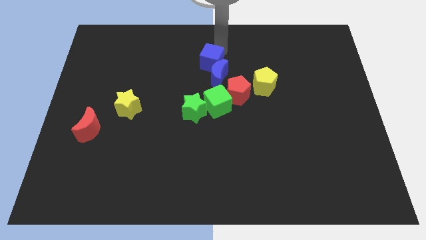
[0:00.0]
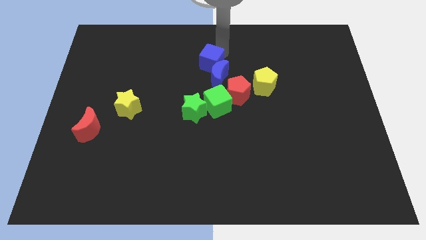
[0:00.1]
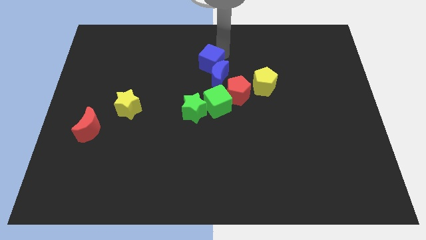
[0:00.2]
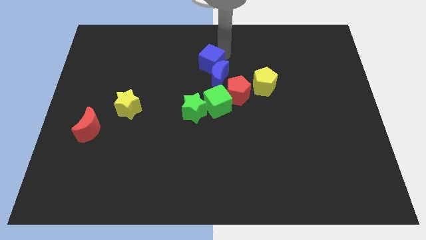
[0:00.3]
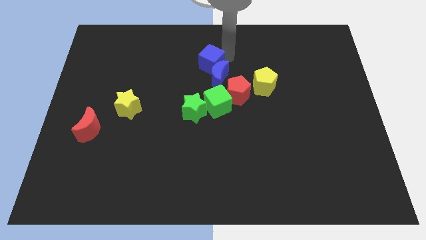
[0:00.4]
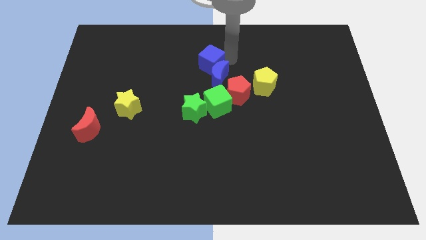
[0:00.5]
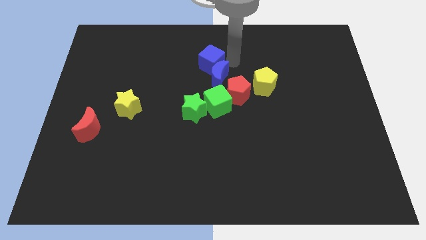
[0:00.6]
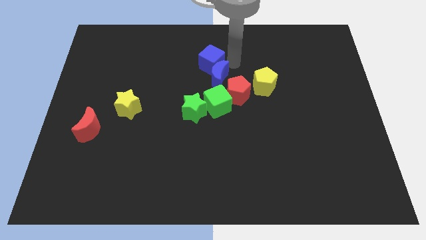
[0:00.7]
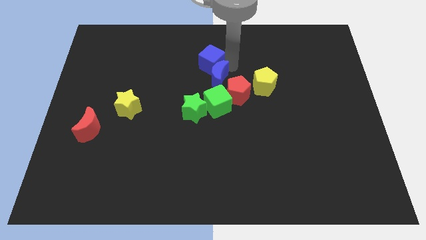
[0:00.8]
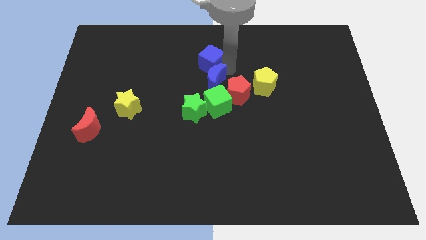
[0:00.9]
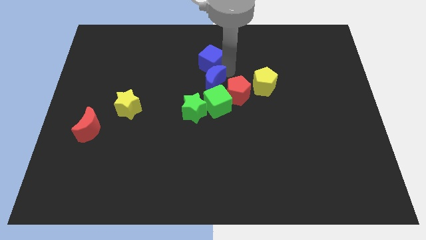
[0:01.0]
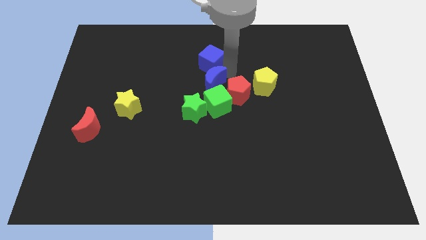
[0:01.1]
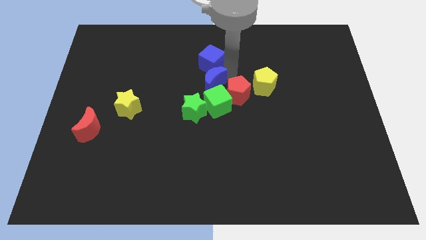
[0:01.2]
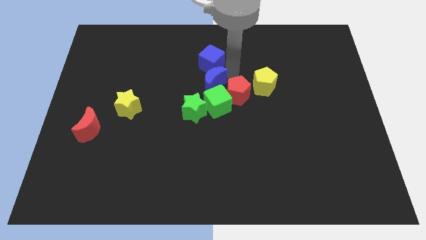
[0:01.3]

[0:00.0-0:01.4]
slightly move the blue crescent towards the green cube

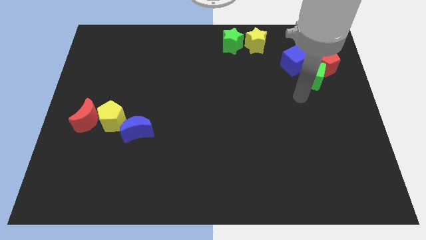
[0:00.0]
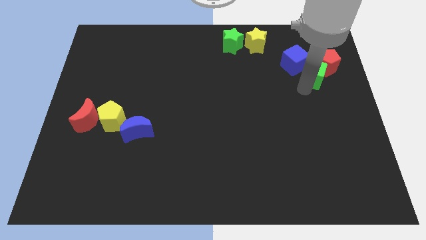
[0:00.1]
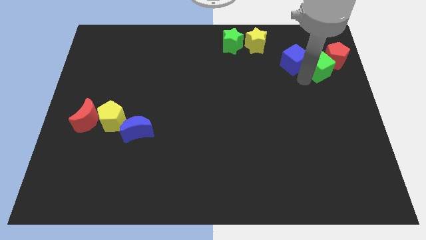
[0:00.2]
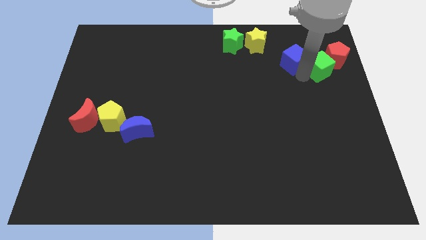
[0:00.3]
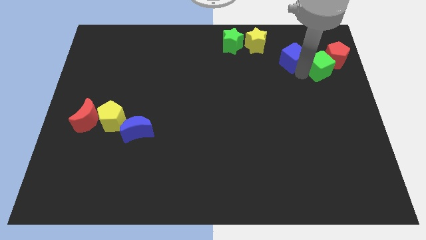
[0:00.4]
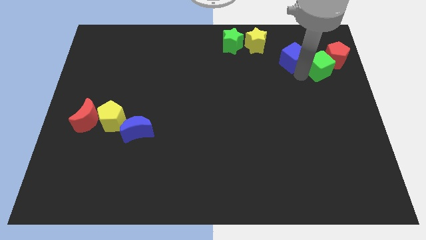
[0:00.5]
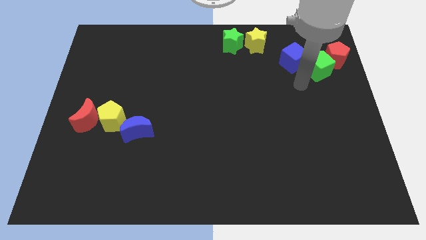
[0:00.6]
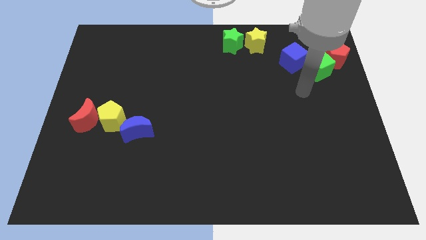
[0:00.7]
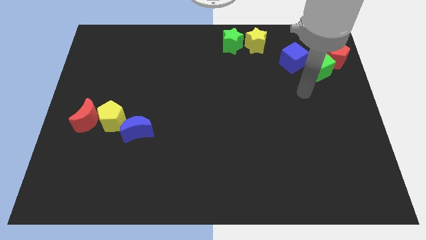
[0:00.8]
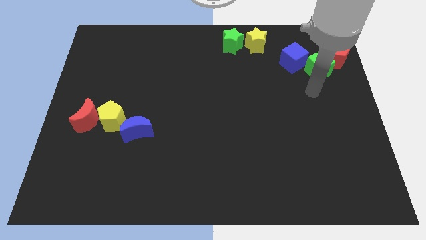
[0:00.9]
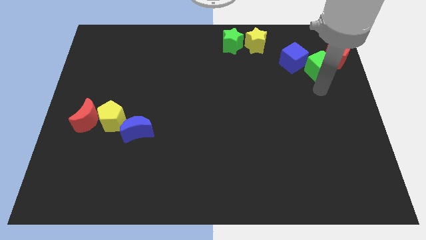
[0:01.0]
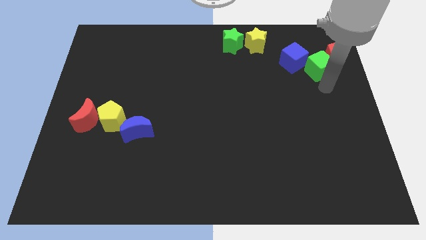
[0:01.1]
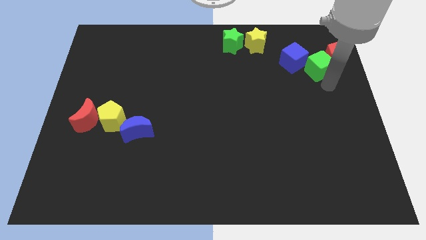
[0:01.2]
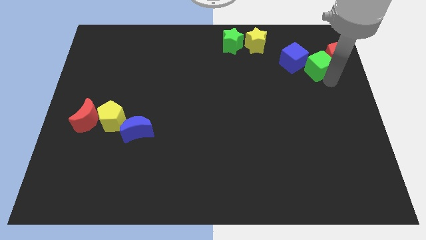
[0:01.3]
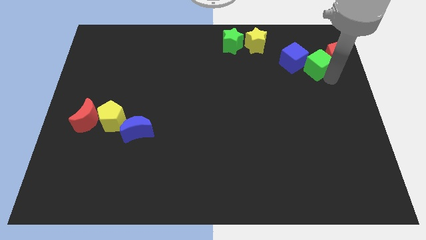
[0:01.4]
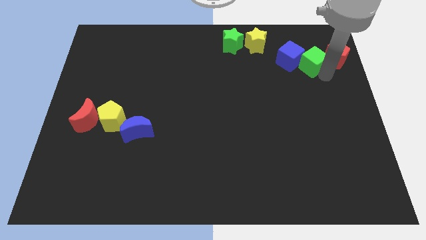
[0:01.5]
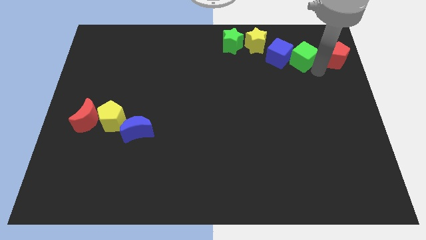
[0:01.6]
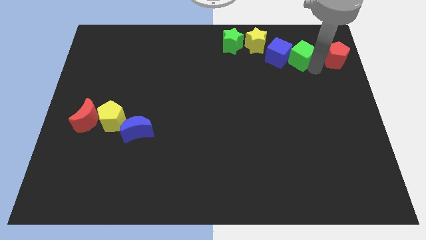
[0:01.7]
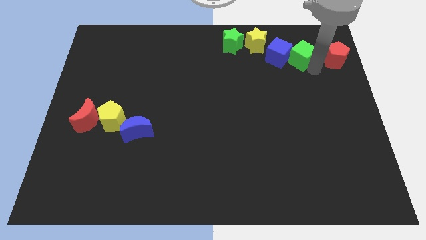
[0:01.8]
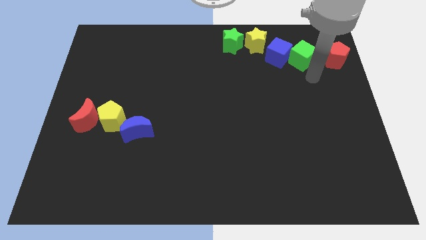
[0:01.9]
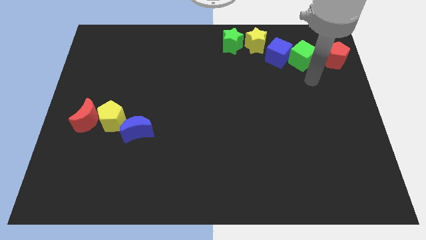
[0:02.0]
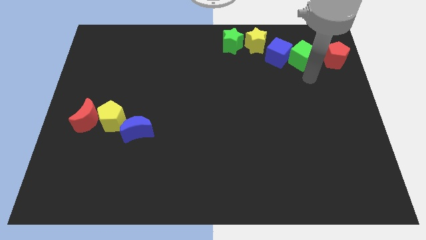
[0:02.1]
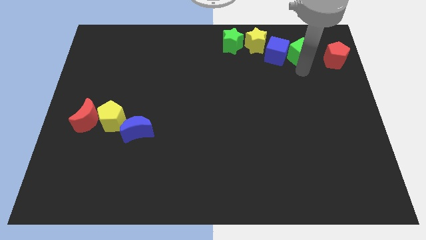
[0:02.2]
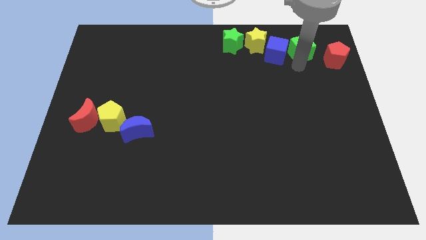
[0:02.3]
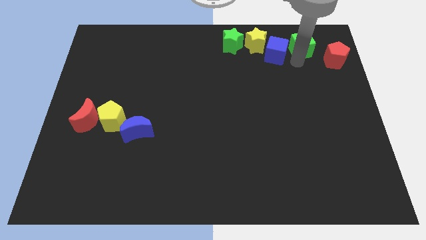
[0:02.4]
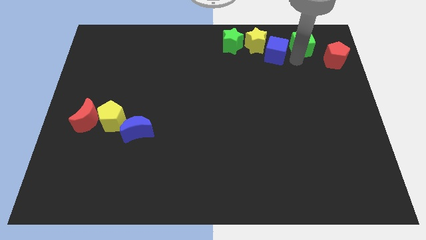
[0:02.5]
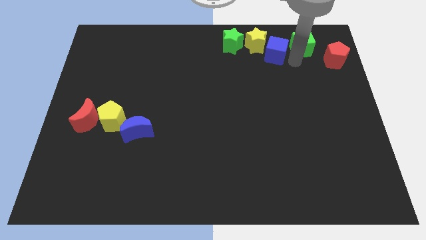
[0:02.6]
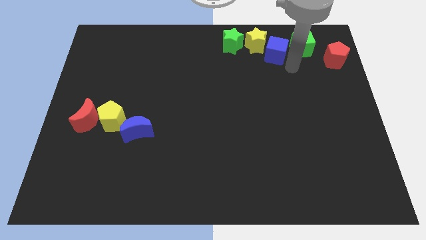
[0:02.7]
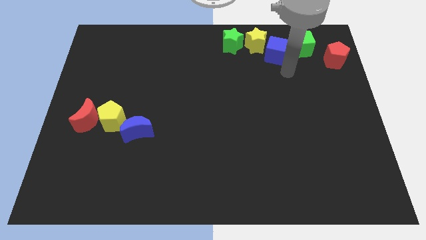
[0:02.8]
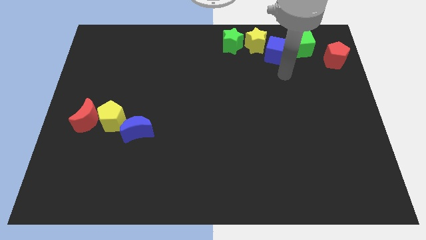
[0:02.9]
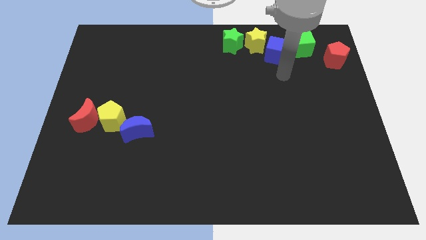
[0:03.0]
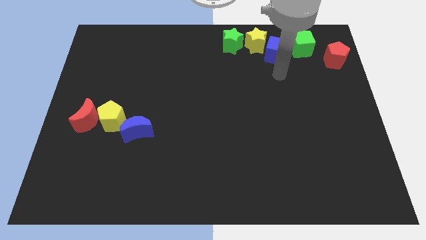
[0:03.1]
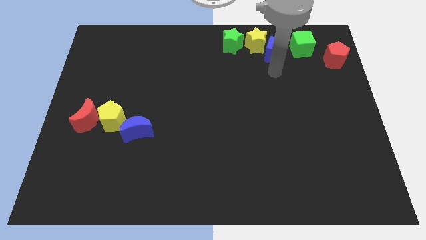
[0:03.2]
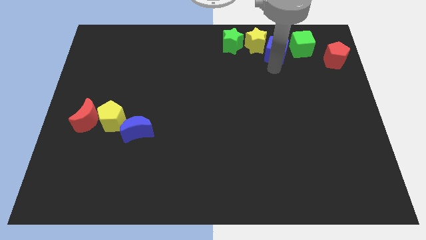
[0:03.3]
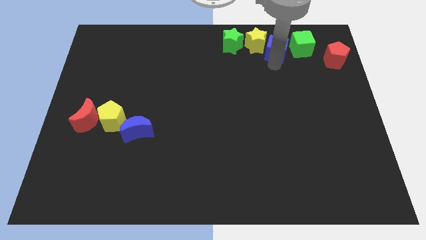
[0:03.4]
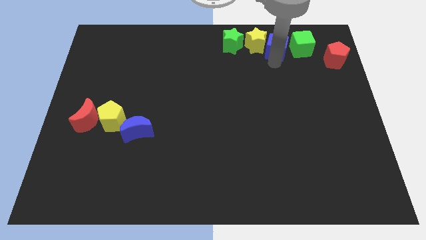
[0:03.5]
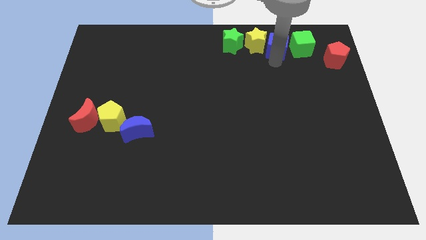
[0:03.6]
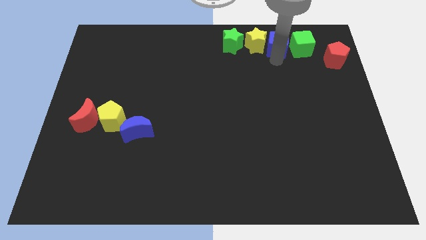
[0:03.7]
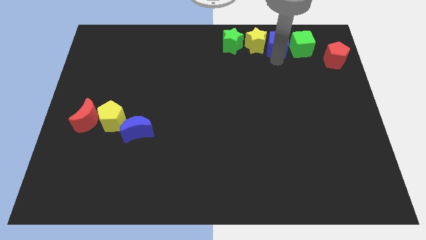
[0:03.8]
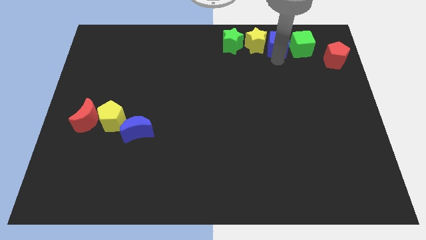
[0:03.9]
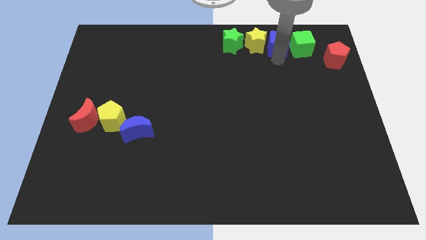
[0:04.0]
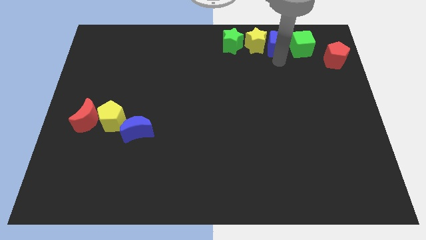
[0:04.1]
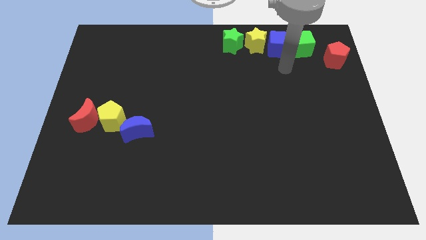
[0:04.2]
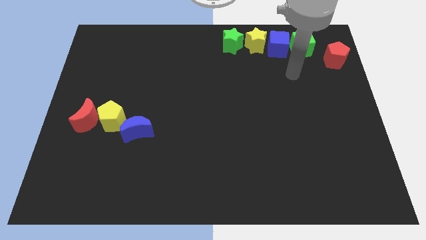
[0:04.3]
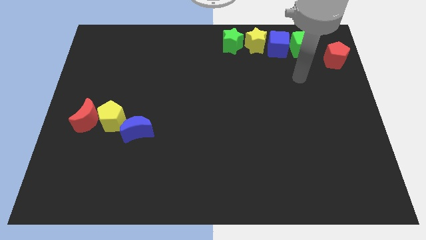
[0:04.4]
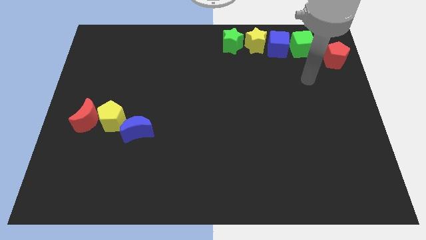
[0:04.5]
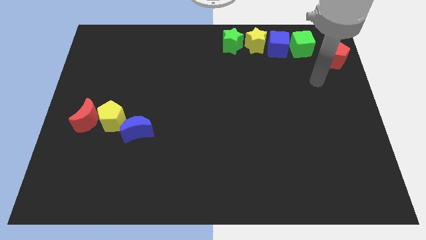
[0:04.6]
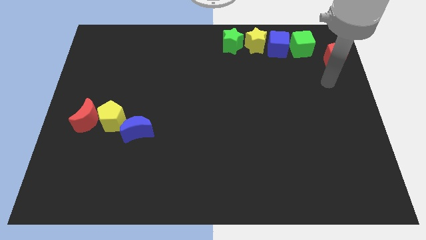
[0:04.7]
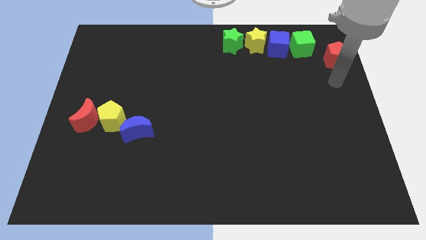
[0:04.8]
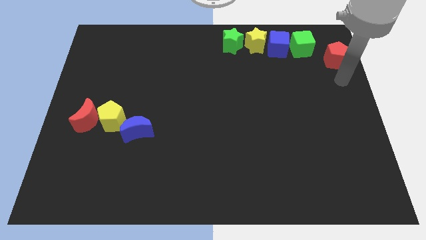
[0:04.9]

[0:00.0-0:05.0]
put the blue cube in between the green cube right of the yellow star

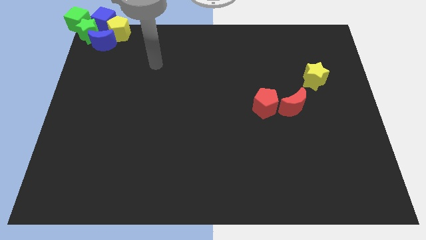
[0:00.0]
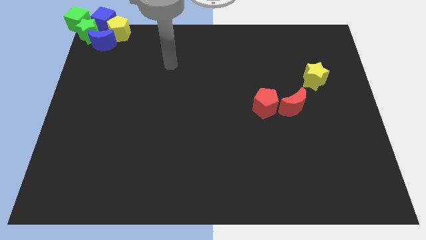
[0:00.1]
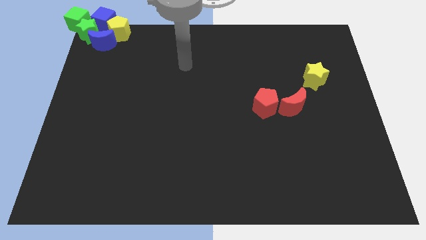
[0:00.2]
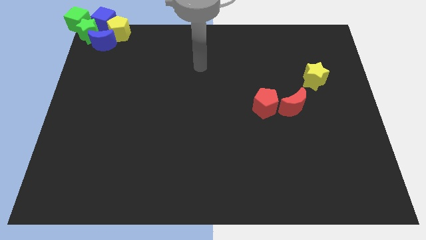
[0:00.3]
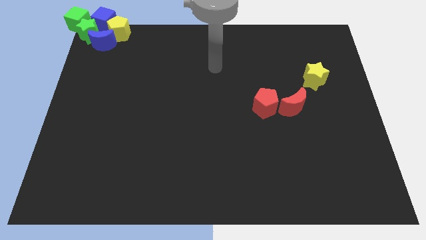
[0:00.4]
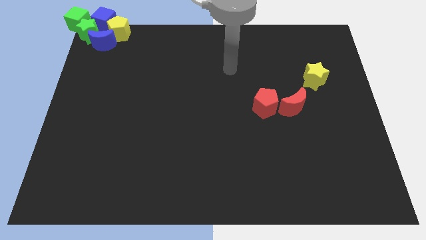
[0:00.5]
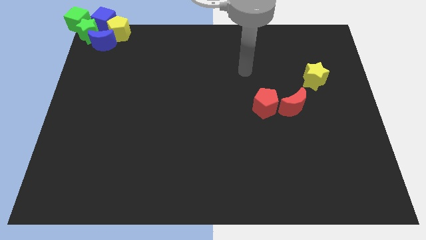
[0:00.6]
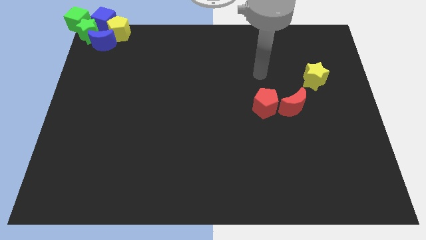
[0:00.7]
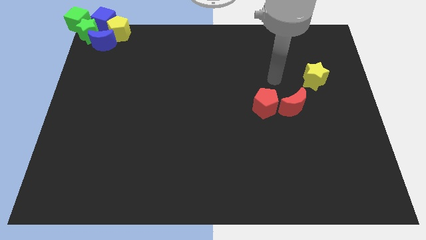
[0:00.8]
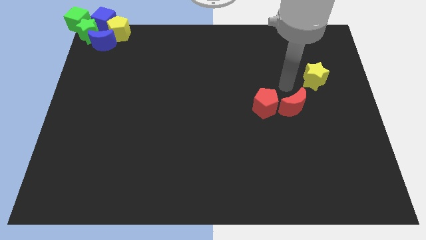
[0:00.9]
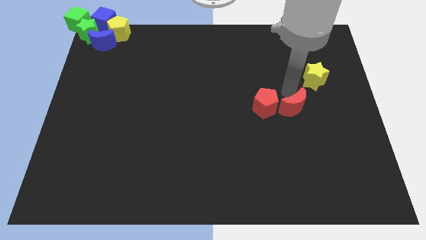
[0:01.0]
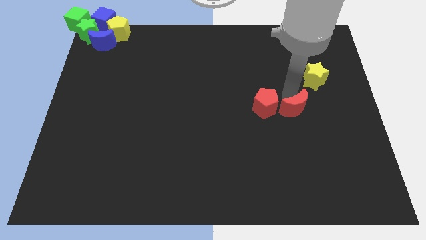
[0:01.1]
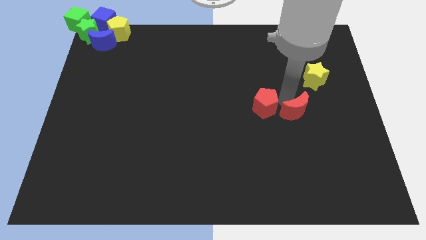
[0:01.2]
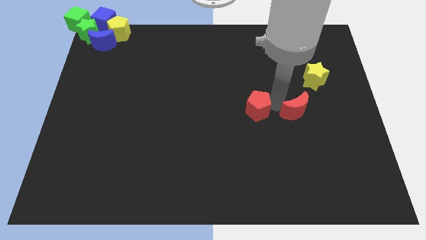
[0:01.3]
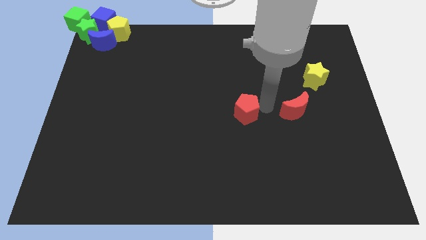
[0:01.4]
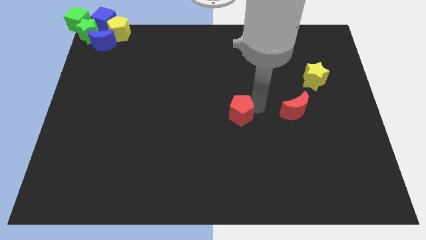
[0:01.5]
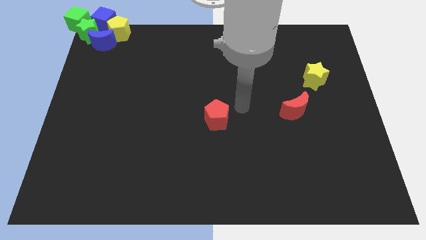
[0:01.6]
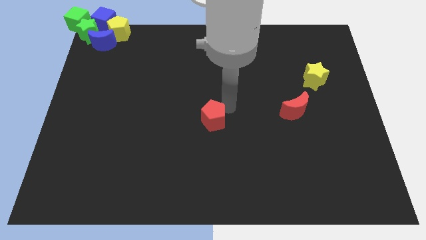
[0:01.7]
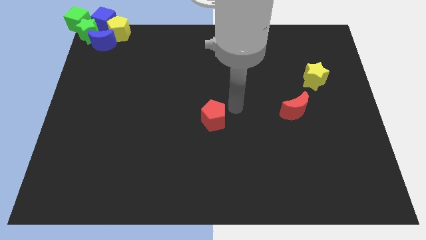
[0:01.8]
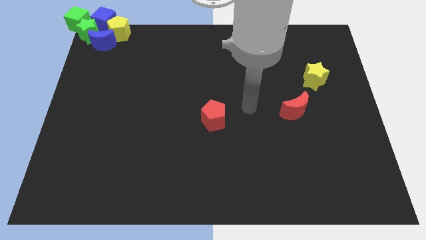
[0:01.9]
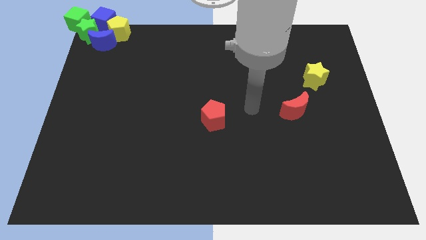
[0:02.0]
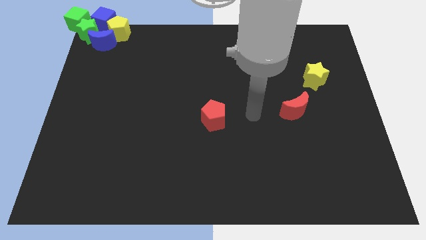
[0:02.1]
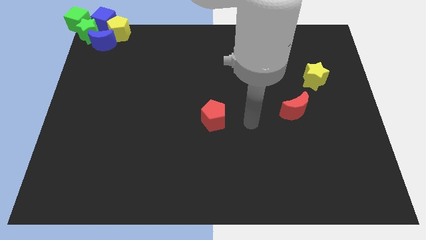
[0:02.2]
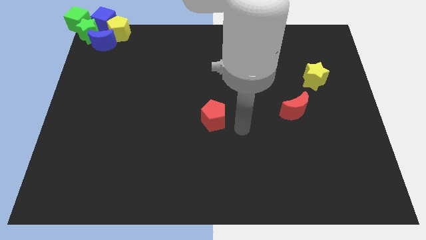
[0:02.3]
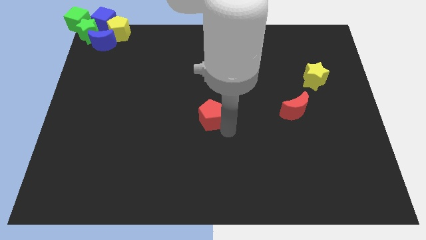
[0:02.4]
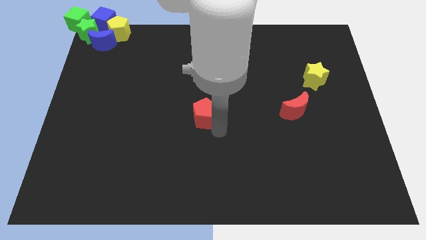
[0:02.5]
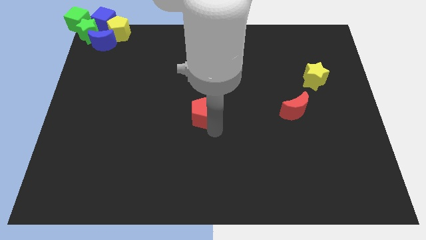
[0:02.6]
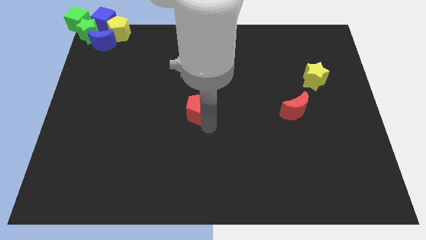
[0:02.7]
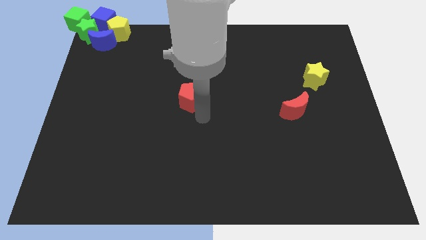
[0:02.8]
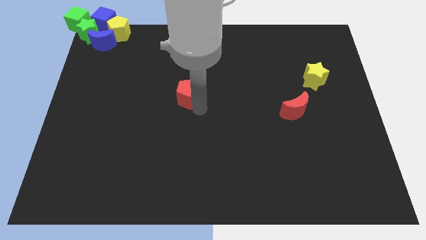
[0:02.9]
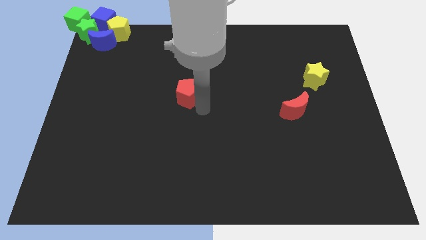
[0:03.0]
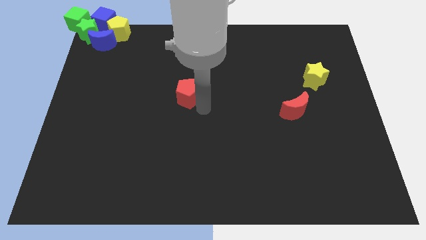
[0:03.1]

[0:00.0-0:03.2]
separate the red pentagon from the red moon
